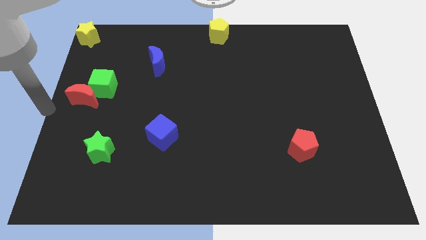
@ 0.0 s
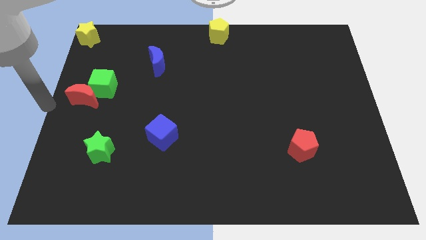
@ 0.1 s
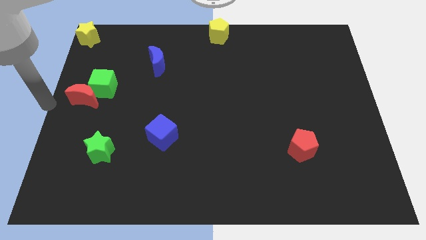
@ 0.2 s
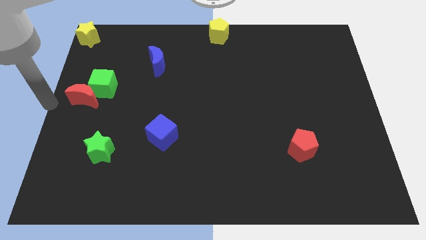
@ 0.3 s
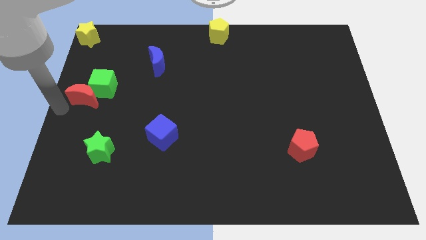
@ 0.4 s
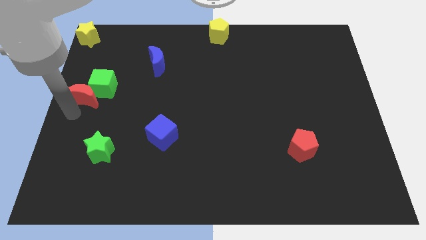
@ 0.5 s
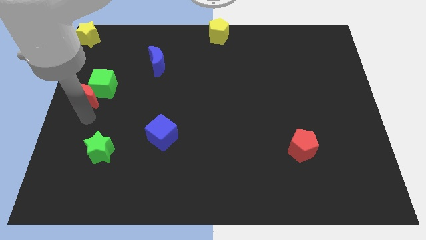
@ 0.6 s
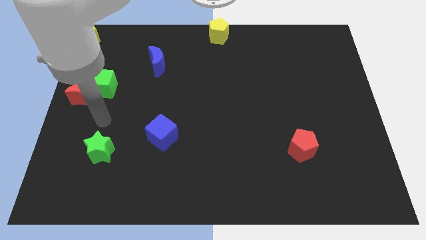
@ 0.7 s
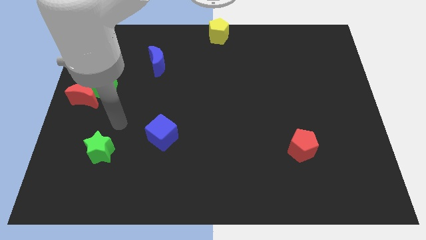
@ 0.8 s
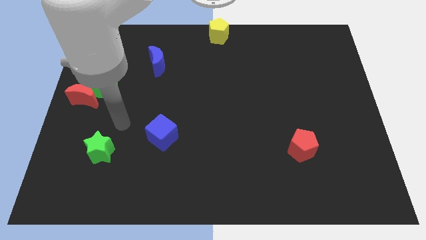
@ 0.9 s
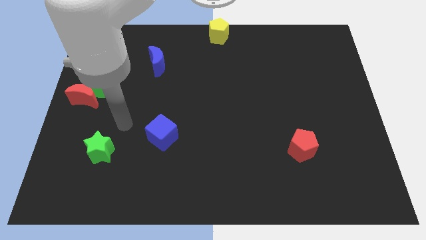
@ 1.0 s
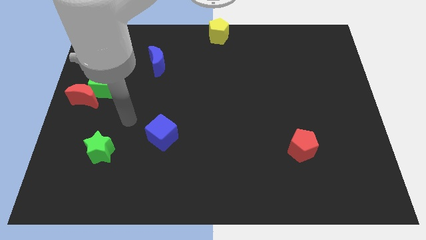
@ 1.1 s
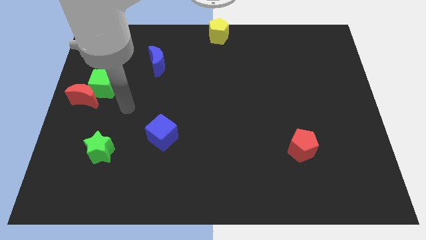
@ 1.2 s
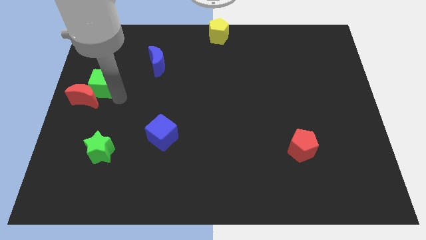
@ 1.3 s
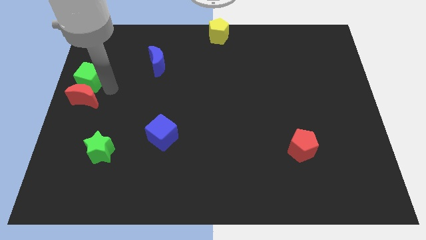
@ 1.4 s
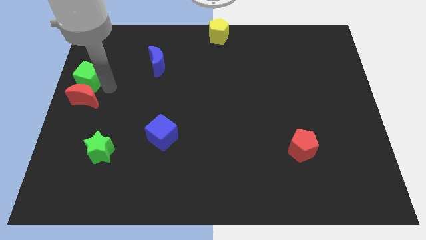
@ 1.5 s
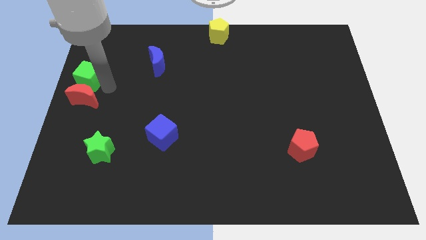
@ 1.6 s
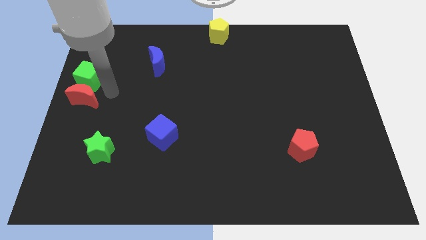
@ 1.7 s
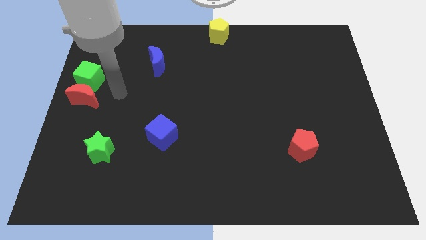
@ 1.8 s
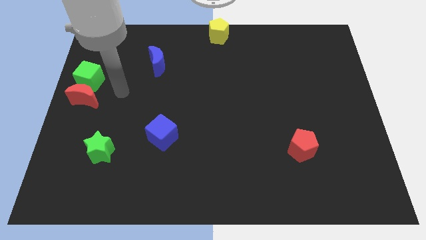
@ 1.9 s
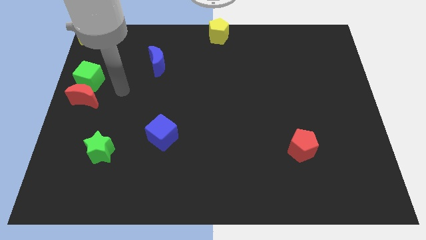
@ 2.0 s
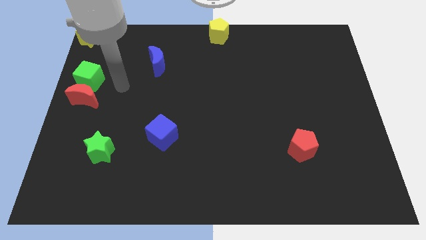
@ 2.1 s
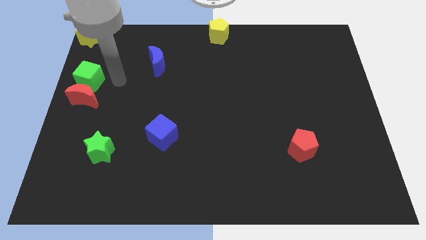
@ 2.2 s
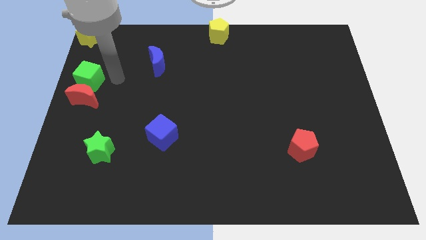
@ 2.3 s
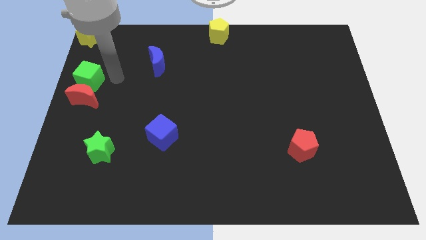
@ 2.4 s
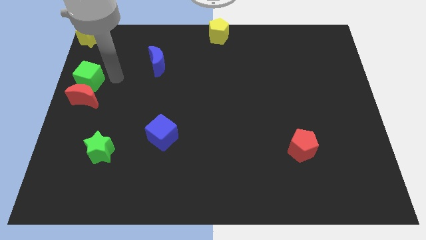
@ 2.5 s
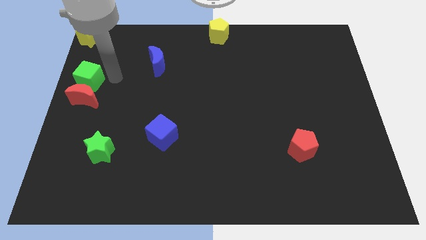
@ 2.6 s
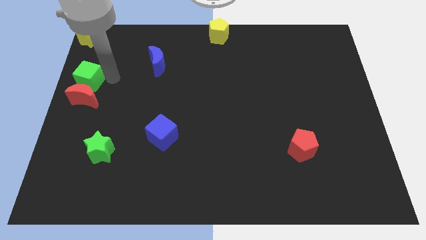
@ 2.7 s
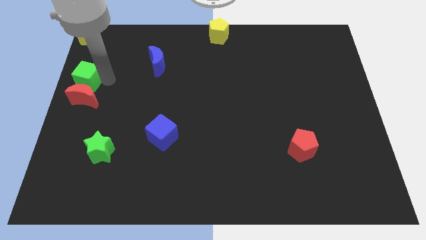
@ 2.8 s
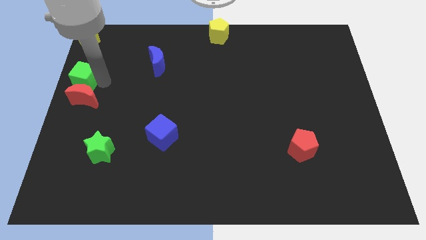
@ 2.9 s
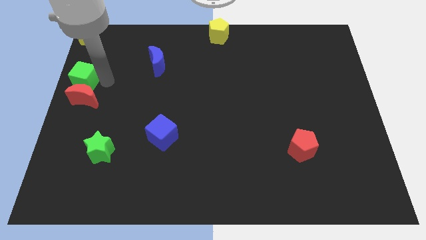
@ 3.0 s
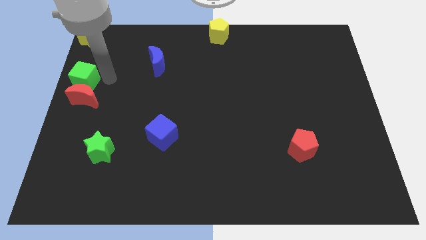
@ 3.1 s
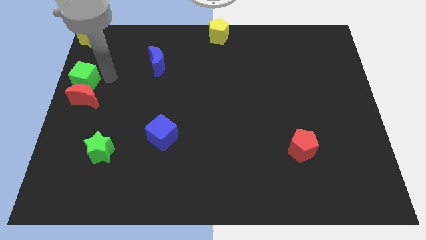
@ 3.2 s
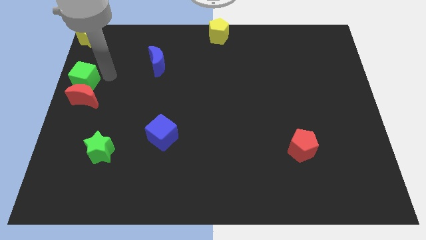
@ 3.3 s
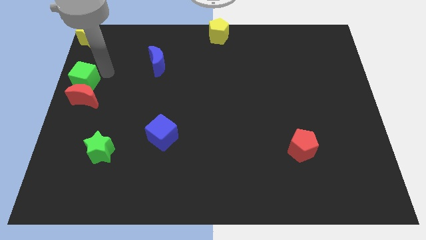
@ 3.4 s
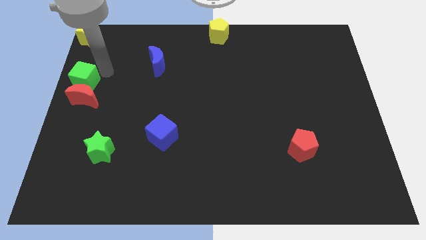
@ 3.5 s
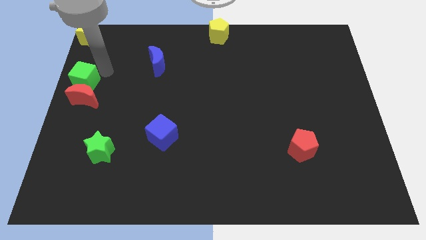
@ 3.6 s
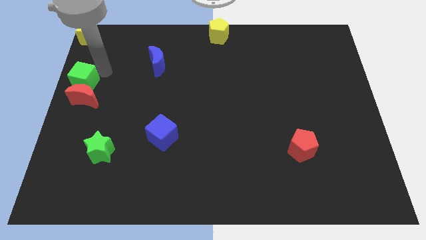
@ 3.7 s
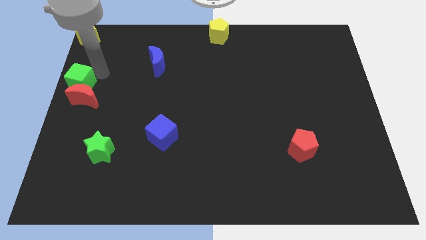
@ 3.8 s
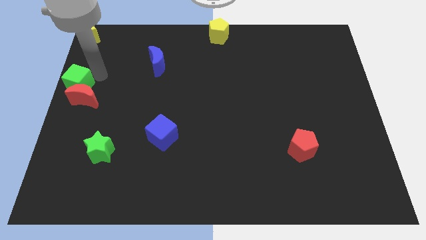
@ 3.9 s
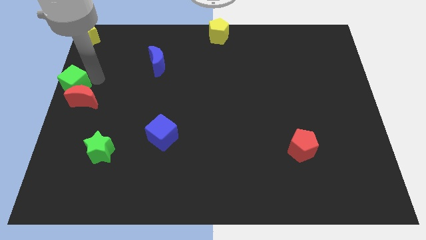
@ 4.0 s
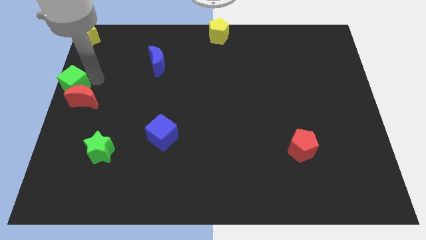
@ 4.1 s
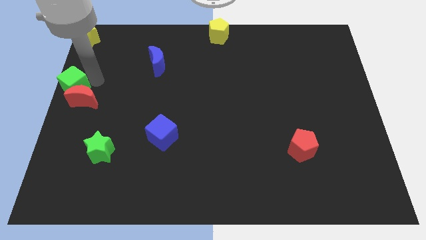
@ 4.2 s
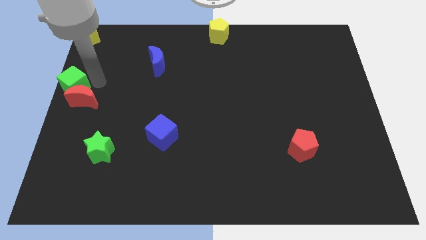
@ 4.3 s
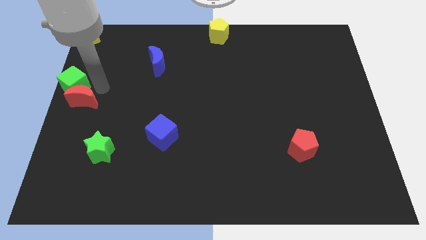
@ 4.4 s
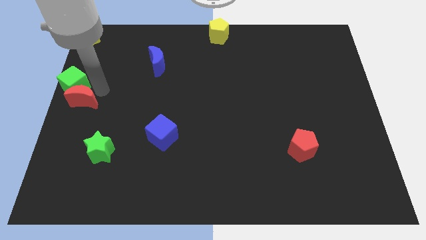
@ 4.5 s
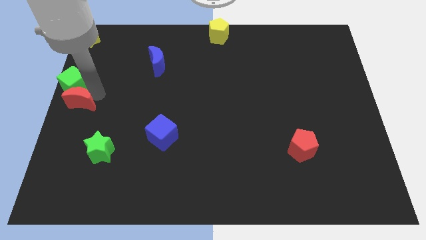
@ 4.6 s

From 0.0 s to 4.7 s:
adjust the green cube and the red crescent at the left center of the board

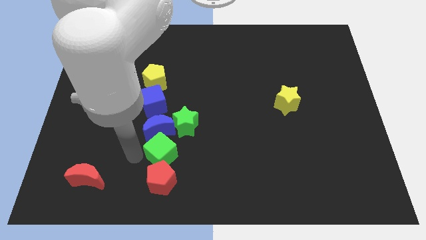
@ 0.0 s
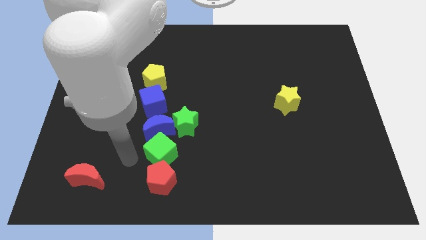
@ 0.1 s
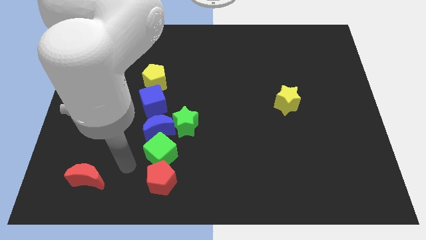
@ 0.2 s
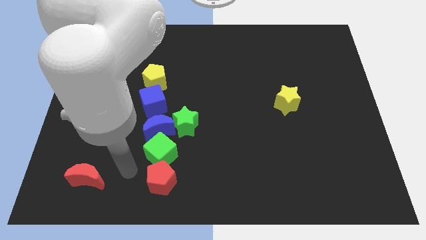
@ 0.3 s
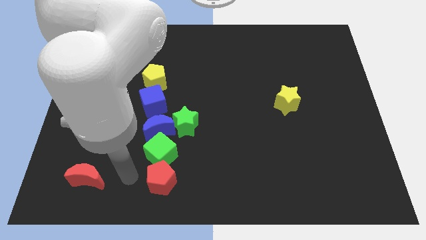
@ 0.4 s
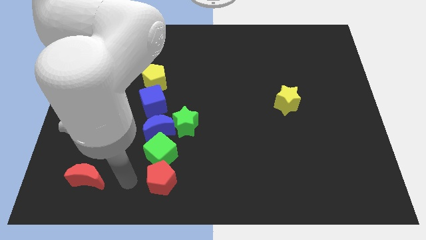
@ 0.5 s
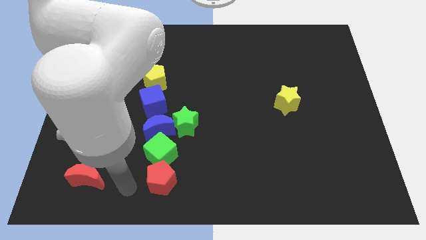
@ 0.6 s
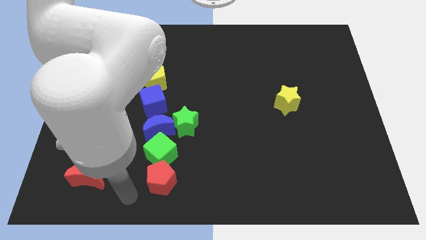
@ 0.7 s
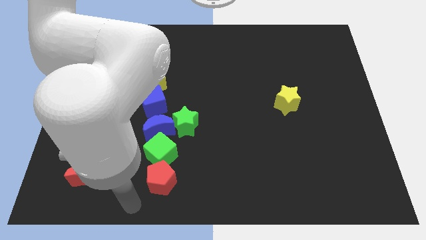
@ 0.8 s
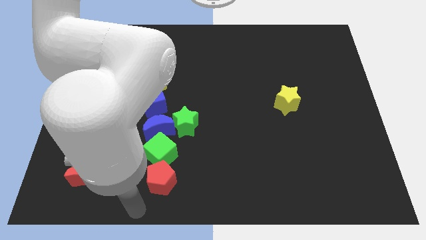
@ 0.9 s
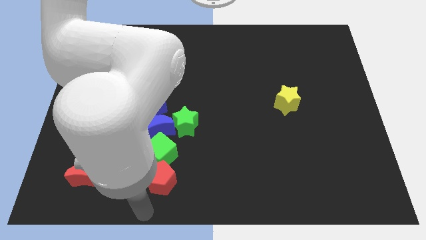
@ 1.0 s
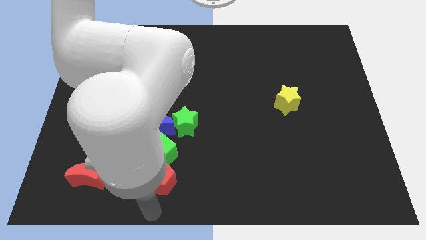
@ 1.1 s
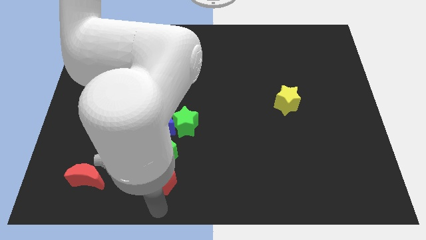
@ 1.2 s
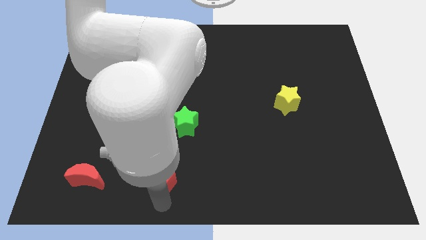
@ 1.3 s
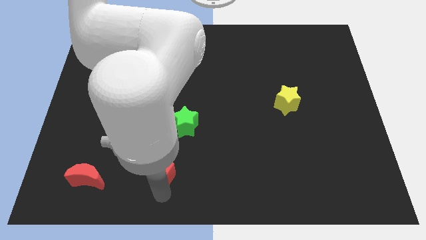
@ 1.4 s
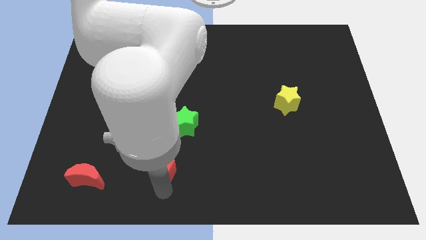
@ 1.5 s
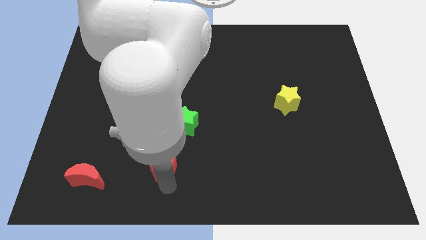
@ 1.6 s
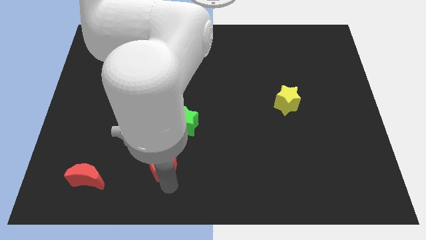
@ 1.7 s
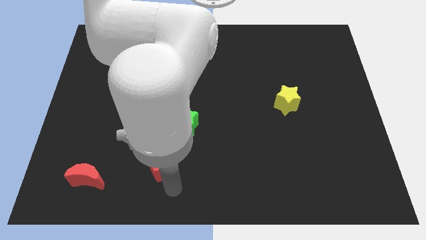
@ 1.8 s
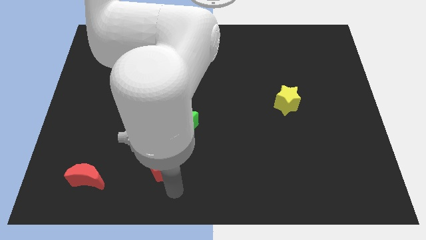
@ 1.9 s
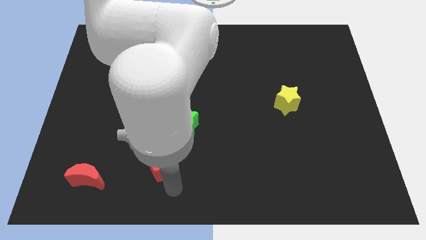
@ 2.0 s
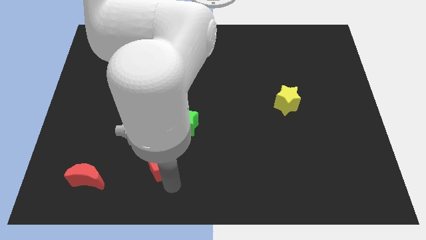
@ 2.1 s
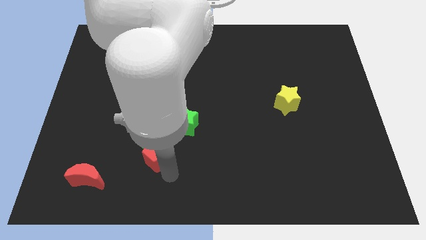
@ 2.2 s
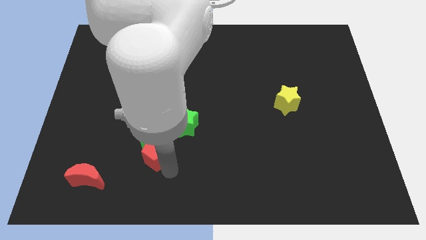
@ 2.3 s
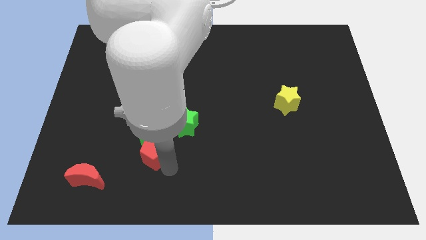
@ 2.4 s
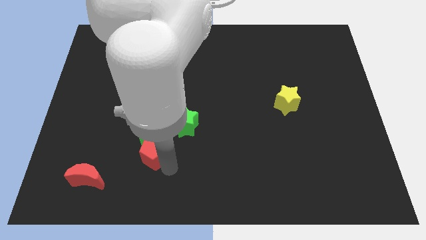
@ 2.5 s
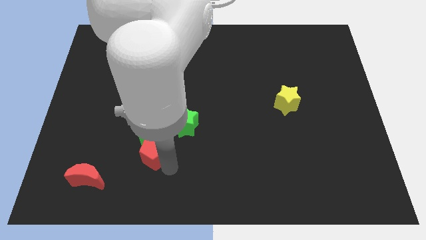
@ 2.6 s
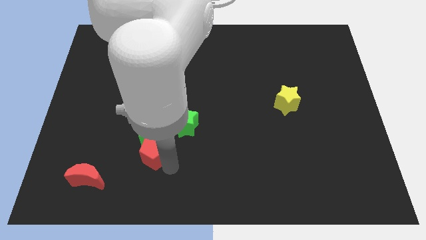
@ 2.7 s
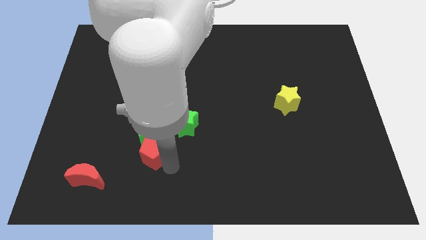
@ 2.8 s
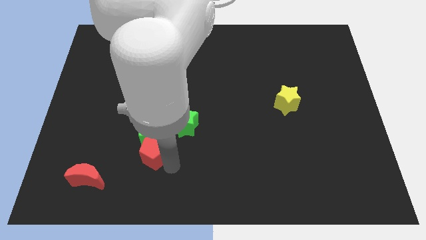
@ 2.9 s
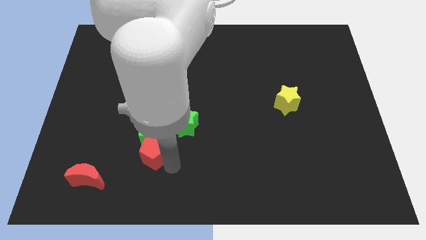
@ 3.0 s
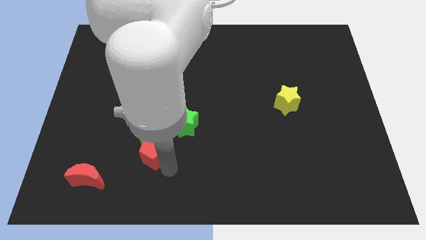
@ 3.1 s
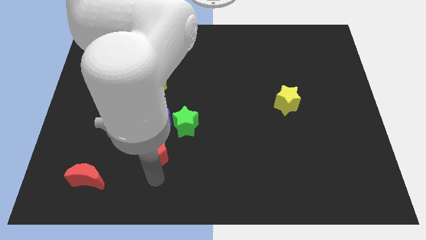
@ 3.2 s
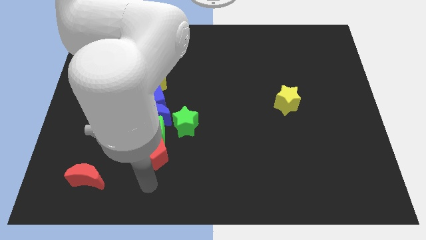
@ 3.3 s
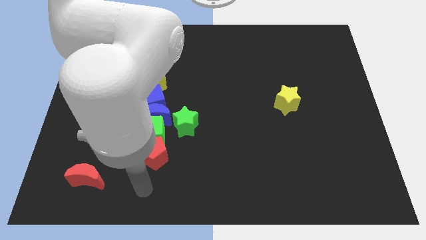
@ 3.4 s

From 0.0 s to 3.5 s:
push the red pentagon close to the green cube

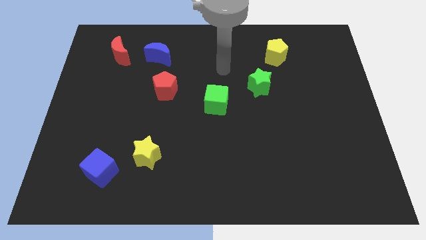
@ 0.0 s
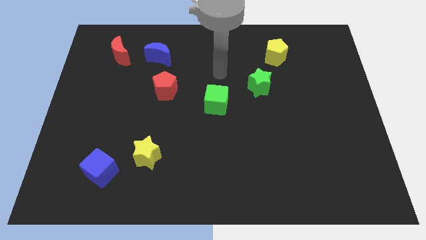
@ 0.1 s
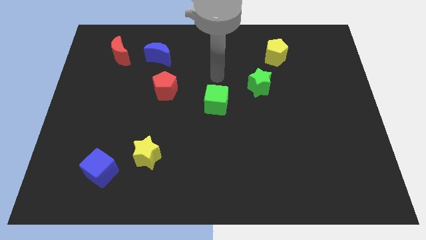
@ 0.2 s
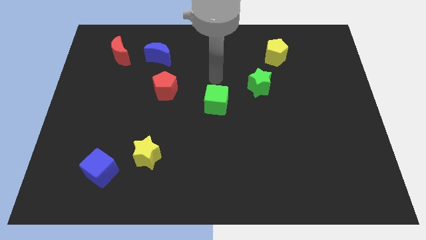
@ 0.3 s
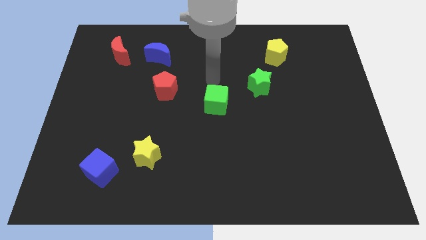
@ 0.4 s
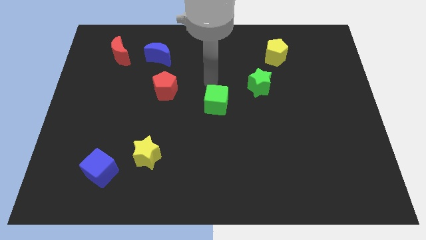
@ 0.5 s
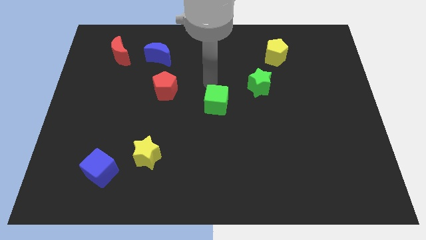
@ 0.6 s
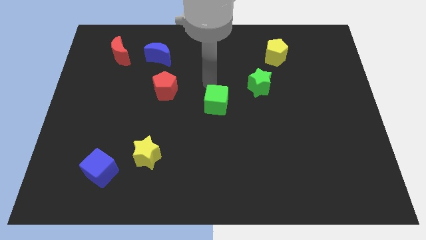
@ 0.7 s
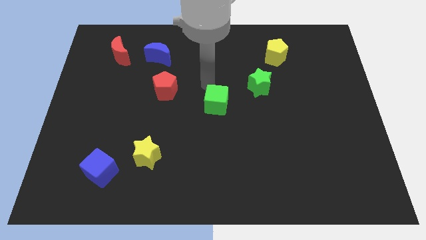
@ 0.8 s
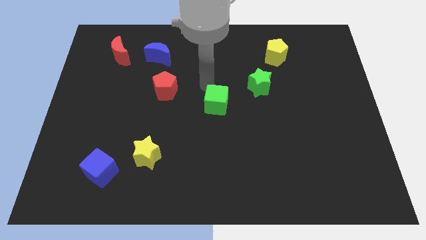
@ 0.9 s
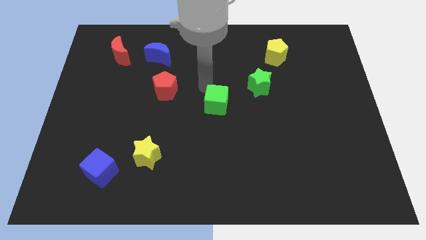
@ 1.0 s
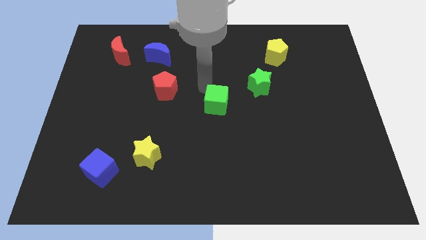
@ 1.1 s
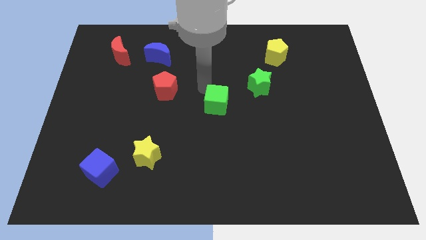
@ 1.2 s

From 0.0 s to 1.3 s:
move your arm close to the green cube
